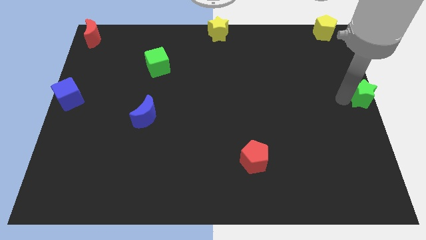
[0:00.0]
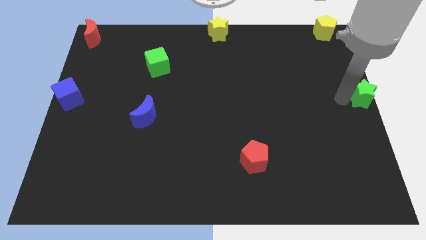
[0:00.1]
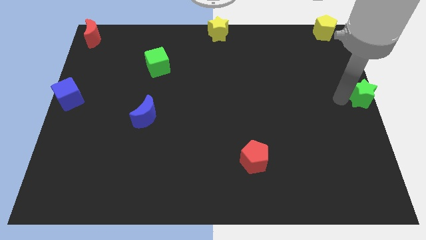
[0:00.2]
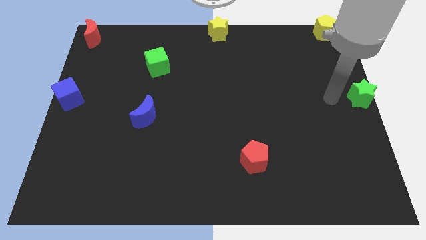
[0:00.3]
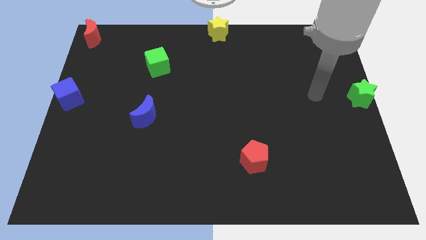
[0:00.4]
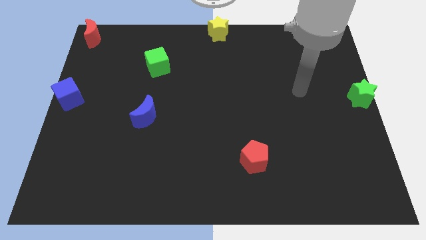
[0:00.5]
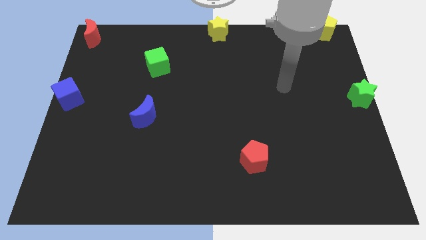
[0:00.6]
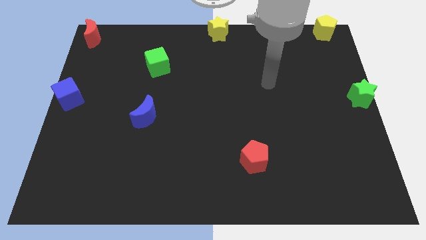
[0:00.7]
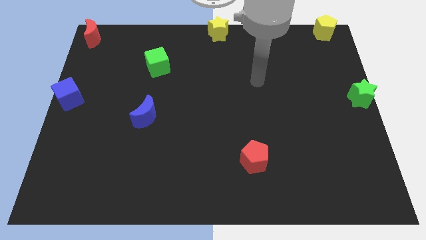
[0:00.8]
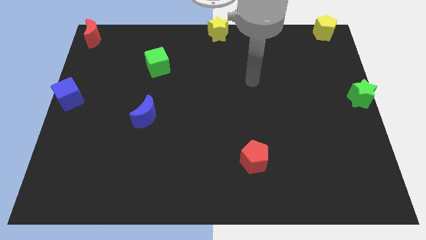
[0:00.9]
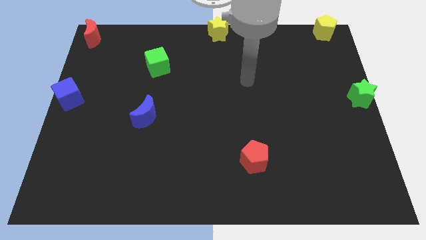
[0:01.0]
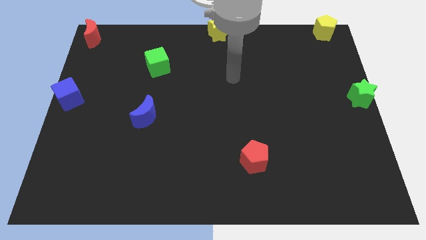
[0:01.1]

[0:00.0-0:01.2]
move your arm away from green star

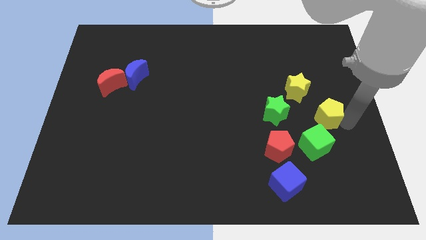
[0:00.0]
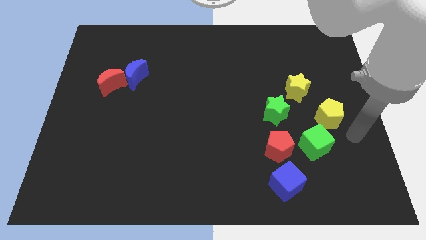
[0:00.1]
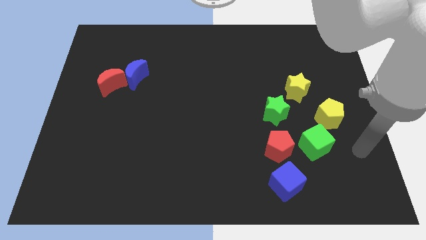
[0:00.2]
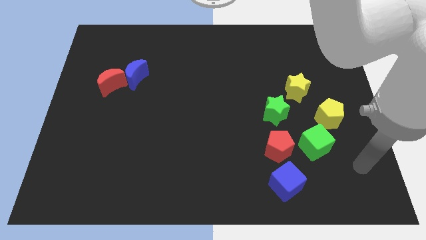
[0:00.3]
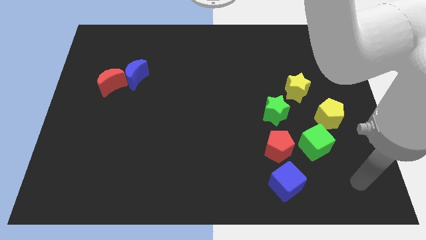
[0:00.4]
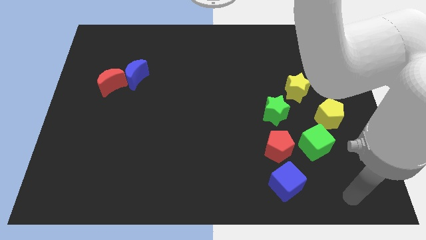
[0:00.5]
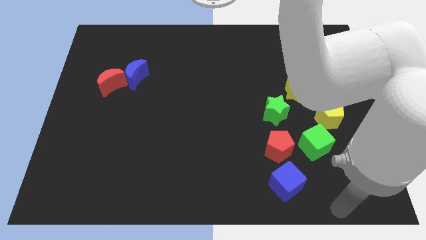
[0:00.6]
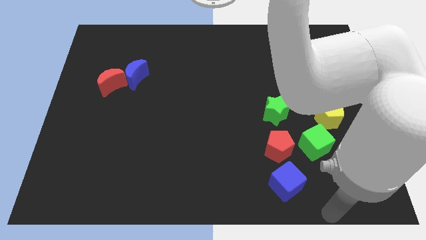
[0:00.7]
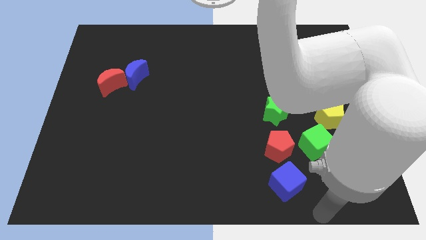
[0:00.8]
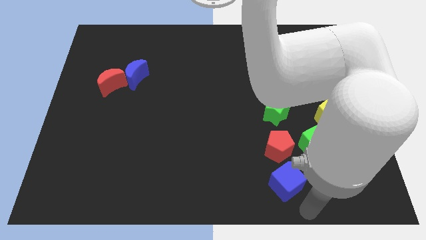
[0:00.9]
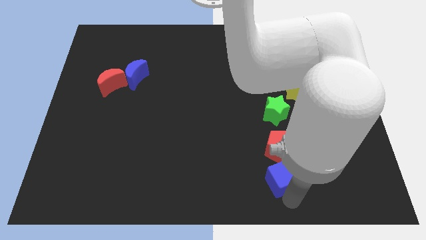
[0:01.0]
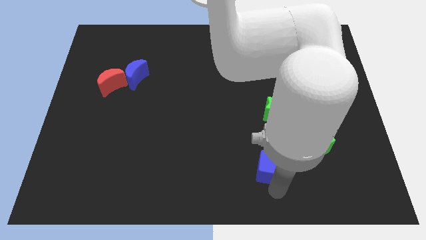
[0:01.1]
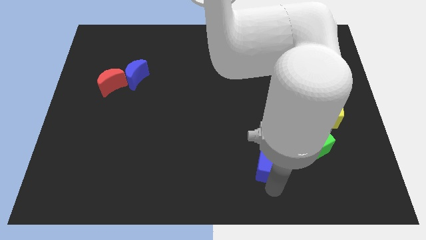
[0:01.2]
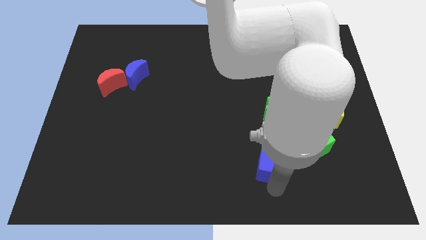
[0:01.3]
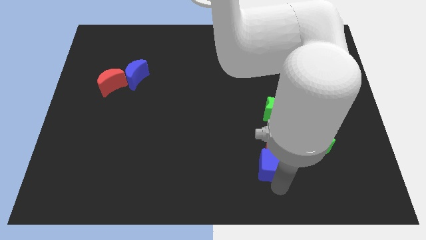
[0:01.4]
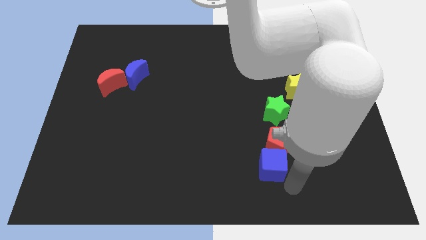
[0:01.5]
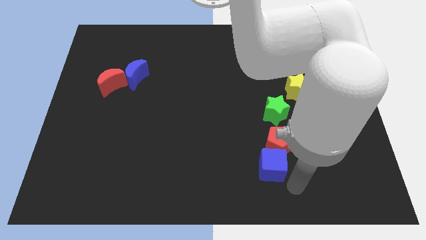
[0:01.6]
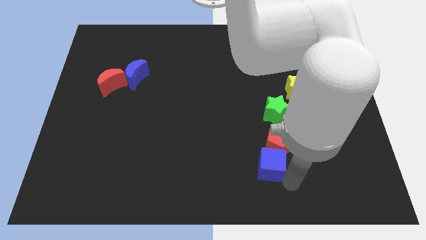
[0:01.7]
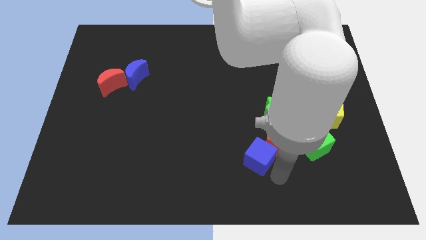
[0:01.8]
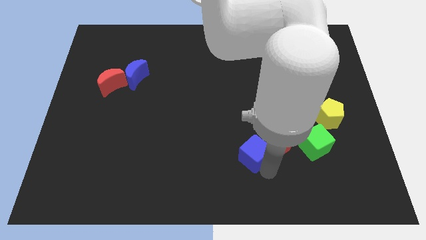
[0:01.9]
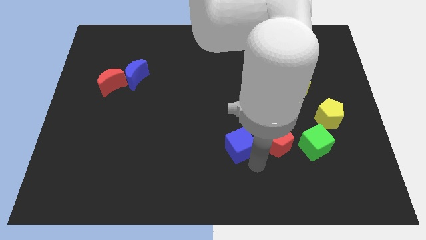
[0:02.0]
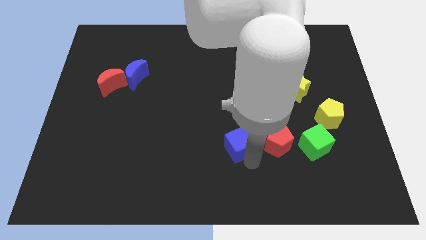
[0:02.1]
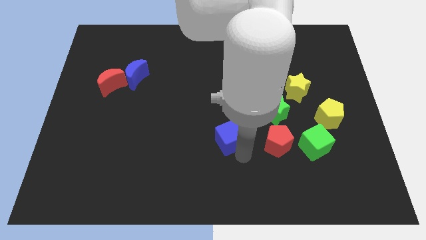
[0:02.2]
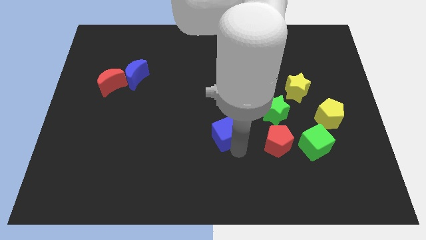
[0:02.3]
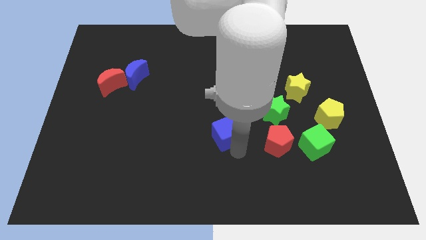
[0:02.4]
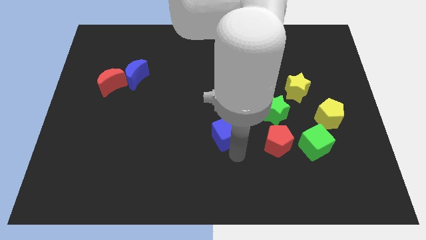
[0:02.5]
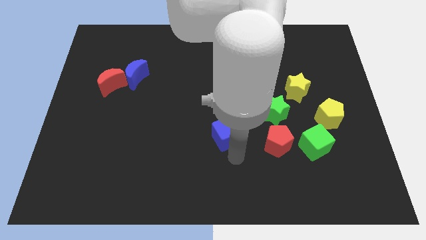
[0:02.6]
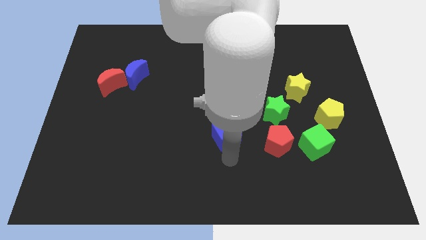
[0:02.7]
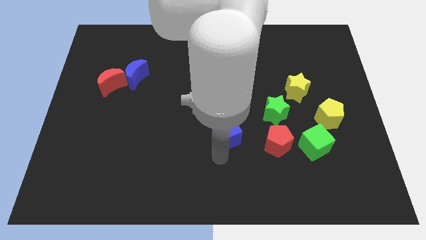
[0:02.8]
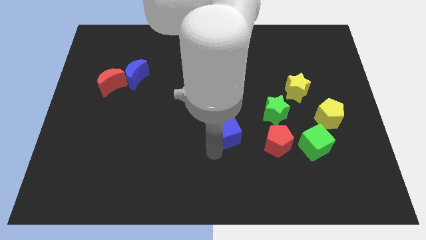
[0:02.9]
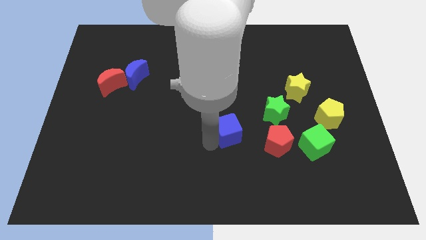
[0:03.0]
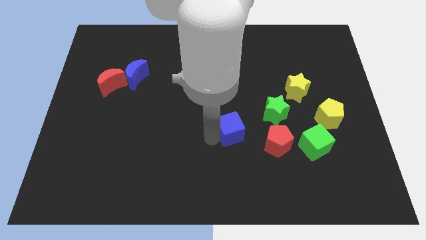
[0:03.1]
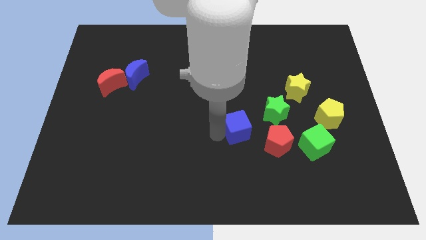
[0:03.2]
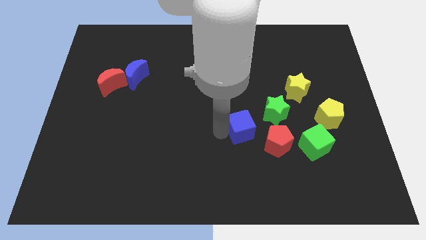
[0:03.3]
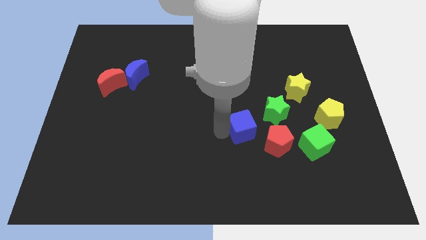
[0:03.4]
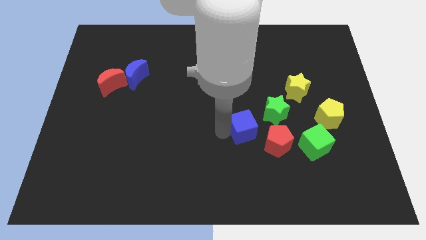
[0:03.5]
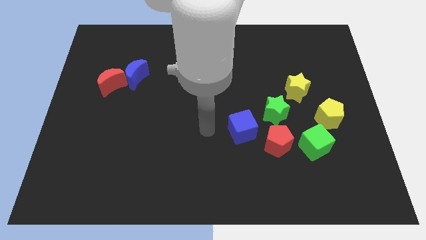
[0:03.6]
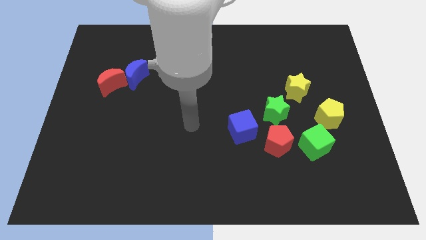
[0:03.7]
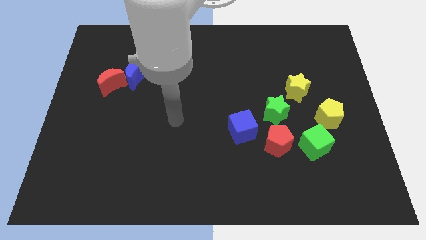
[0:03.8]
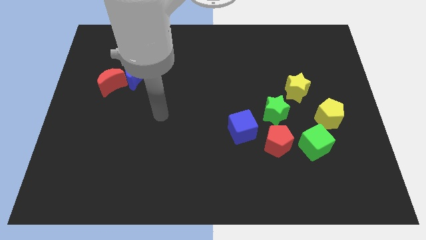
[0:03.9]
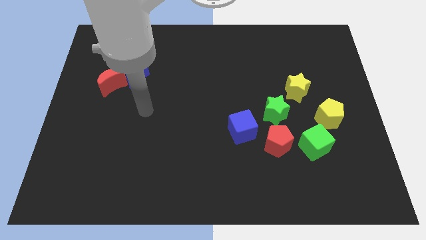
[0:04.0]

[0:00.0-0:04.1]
put the blue cube on the left side of the red pentagon

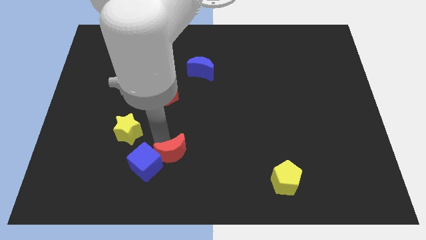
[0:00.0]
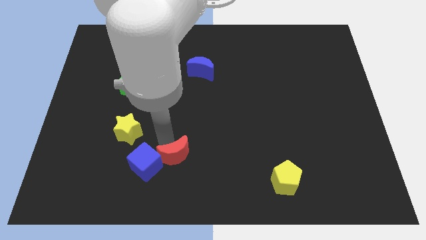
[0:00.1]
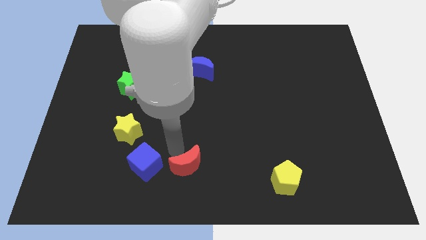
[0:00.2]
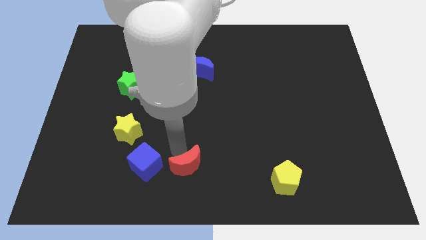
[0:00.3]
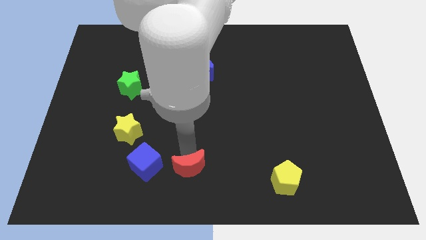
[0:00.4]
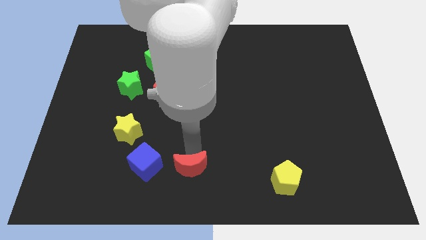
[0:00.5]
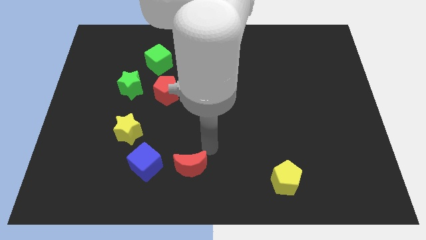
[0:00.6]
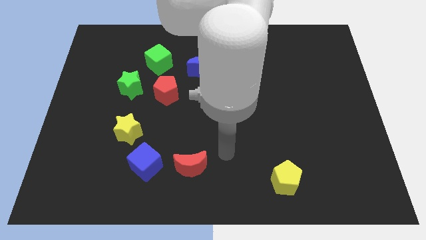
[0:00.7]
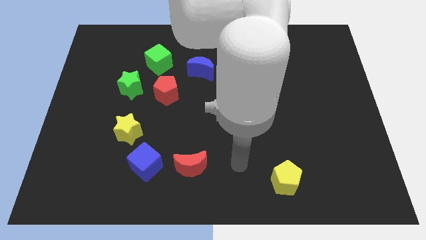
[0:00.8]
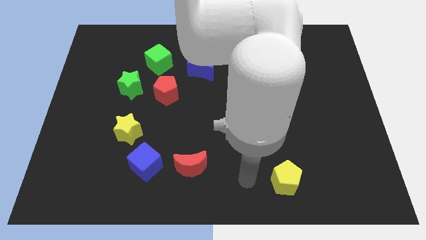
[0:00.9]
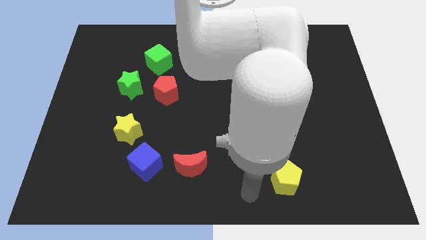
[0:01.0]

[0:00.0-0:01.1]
slide the red moon right to the blue cube

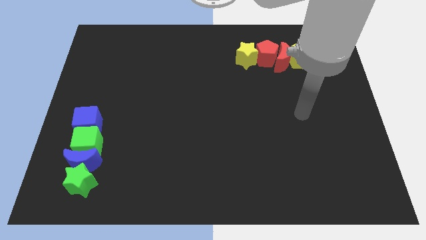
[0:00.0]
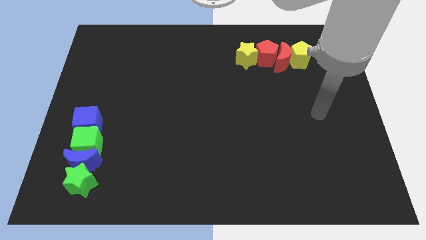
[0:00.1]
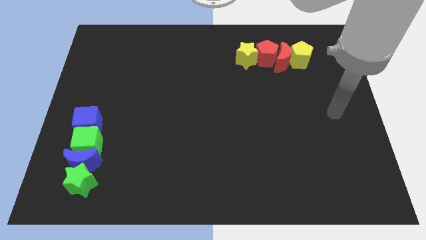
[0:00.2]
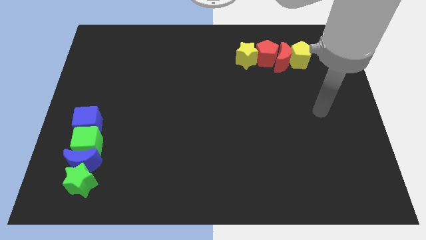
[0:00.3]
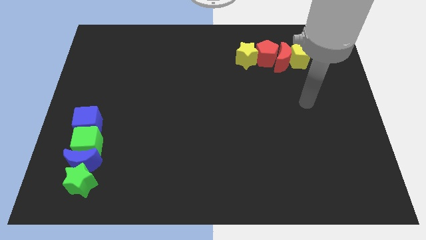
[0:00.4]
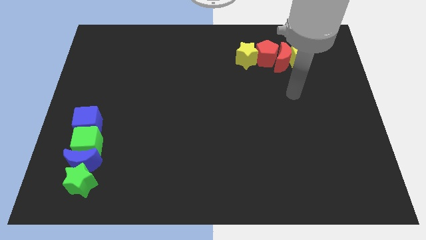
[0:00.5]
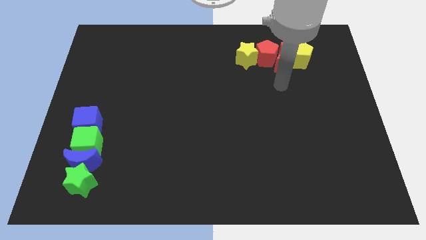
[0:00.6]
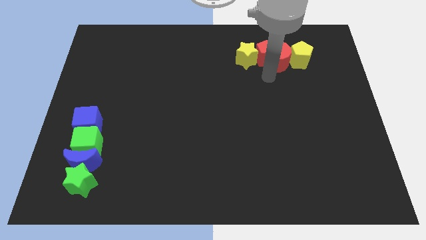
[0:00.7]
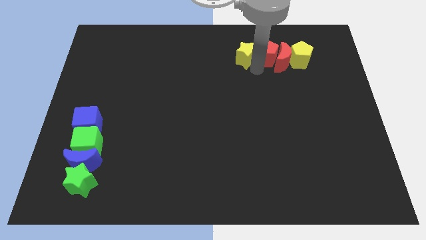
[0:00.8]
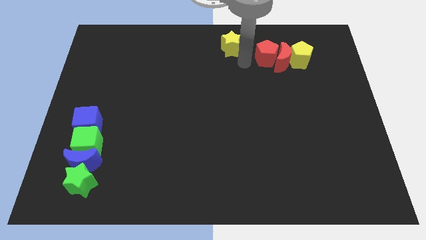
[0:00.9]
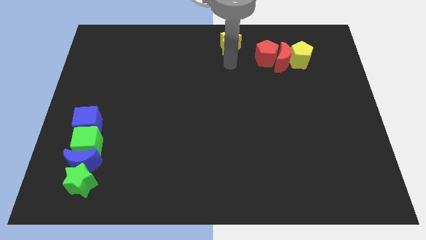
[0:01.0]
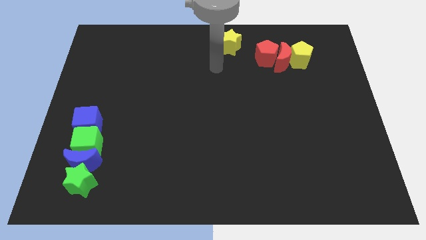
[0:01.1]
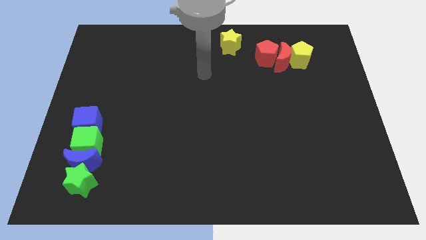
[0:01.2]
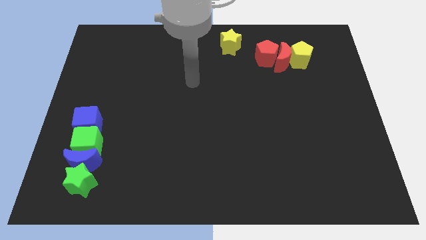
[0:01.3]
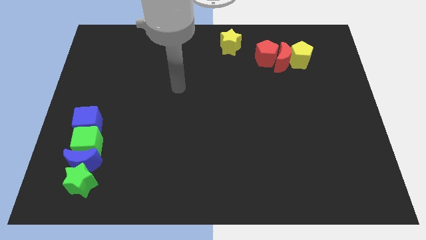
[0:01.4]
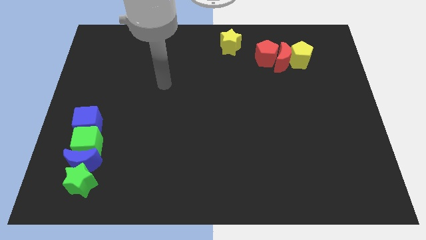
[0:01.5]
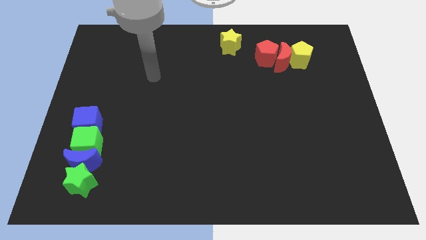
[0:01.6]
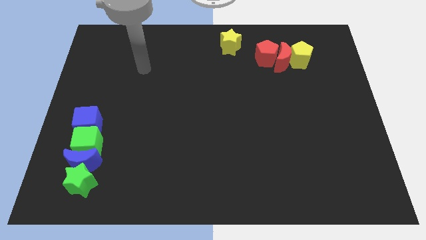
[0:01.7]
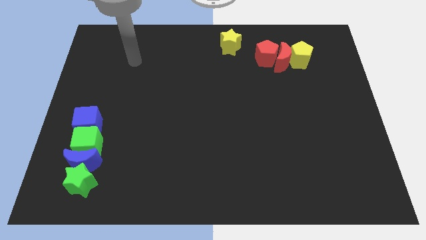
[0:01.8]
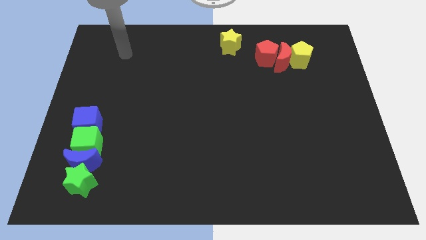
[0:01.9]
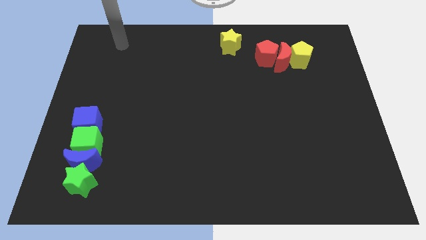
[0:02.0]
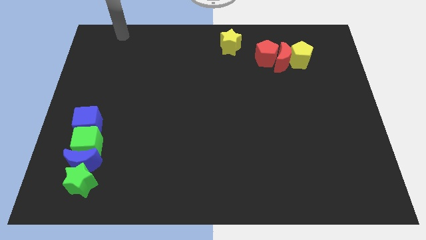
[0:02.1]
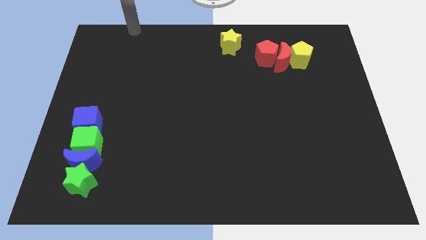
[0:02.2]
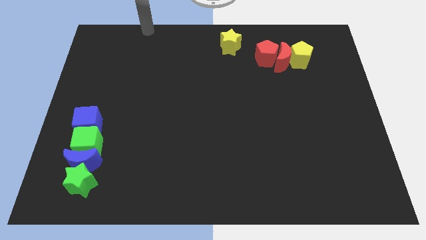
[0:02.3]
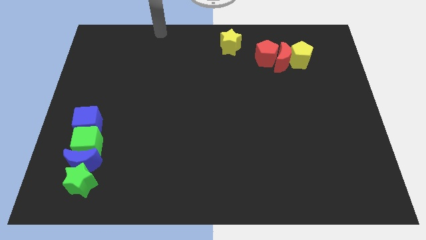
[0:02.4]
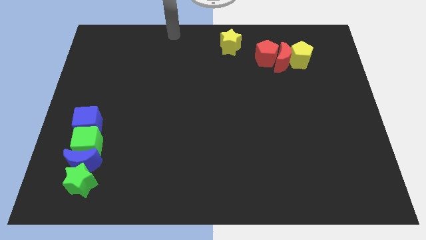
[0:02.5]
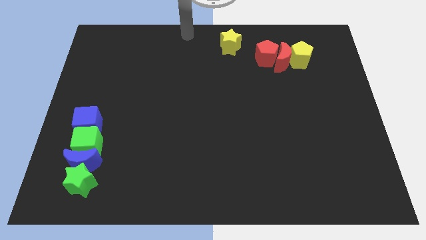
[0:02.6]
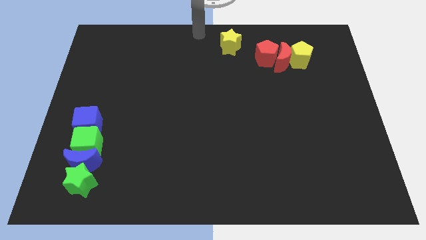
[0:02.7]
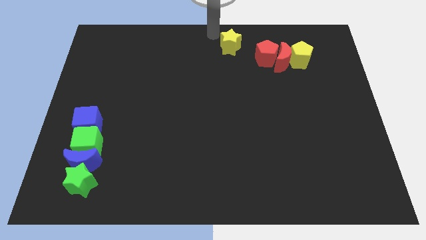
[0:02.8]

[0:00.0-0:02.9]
separate red pentagon and yellow star
